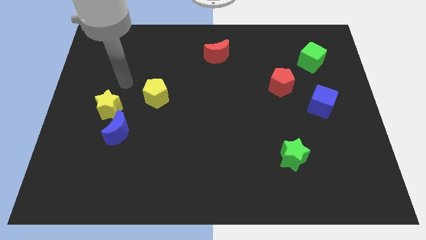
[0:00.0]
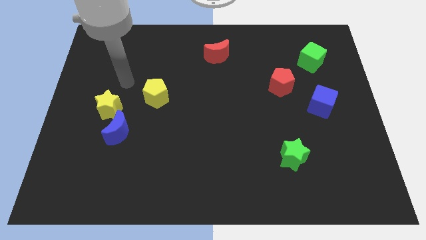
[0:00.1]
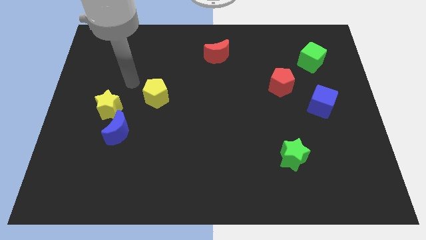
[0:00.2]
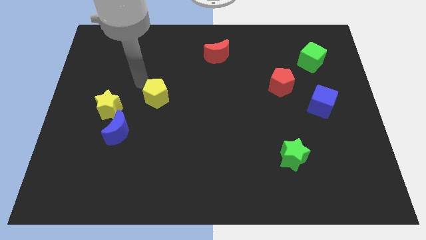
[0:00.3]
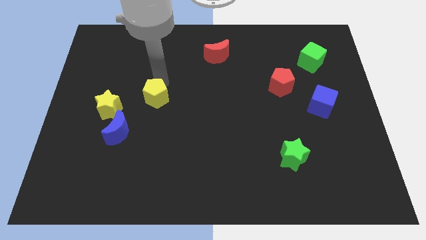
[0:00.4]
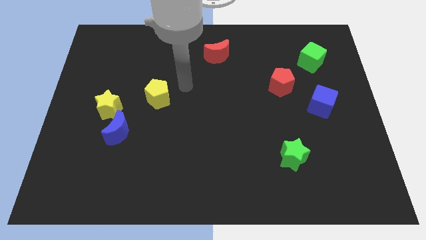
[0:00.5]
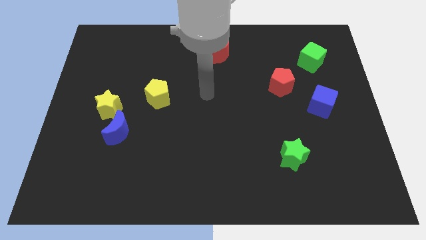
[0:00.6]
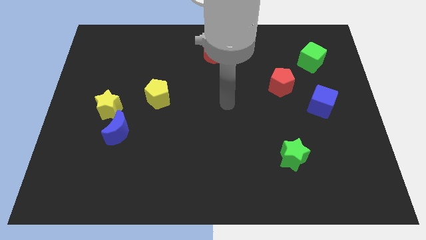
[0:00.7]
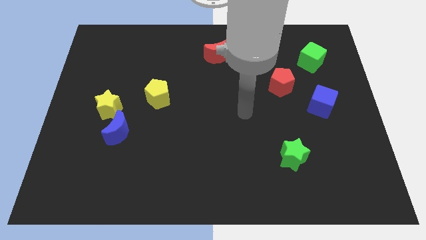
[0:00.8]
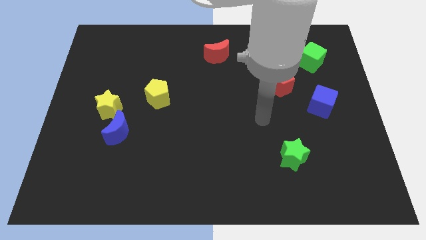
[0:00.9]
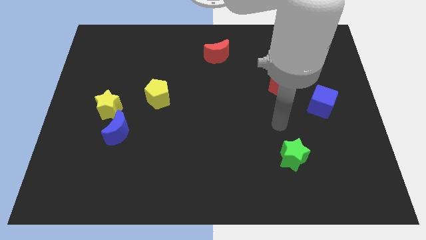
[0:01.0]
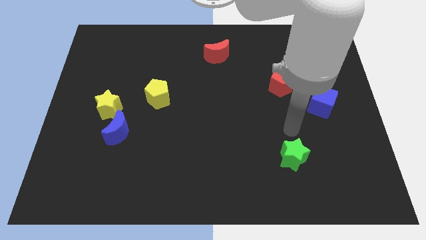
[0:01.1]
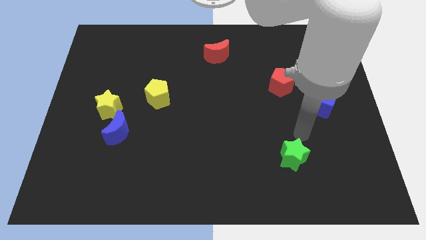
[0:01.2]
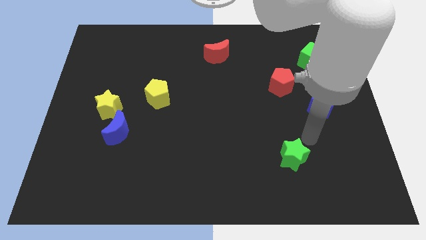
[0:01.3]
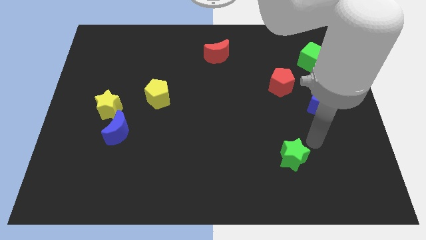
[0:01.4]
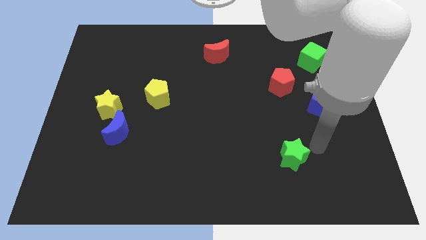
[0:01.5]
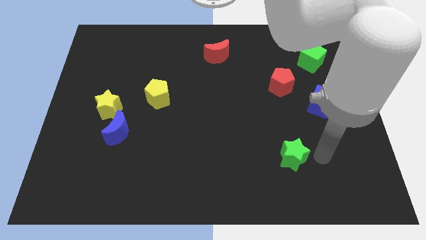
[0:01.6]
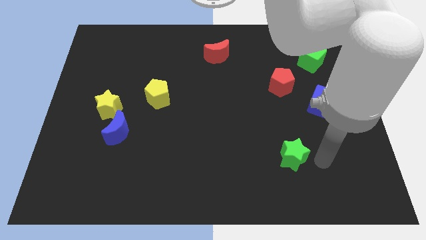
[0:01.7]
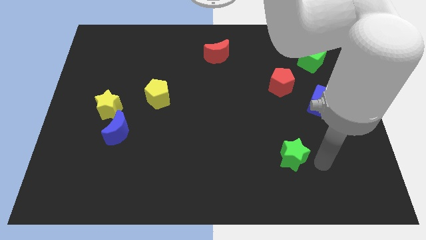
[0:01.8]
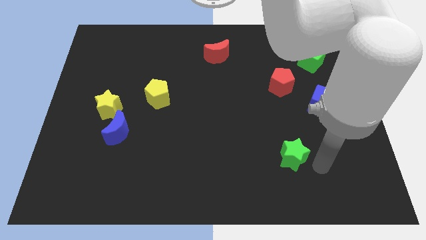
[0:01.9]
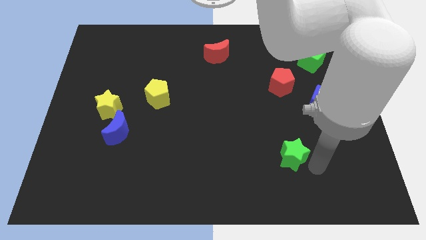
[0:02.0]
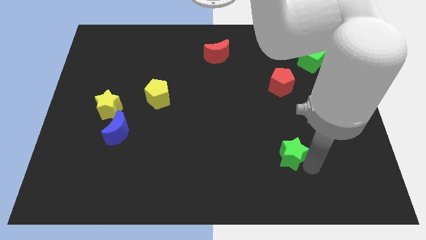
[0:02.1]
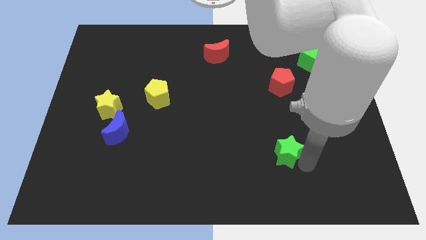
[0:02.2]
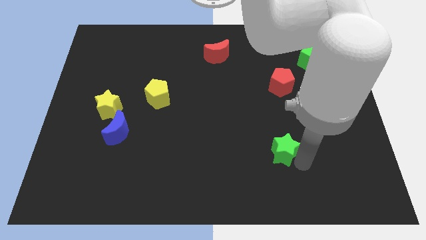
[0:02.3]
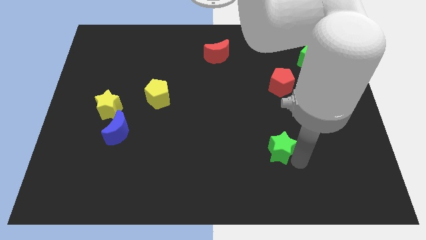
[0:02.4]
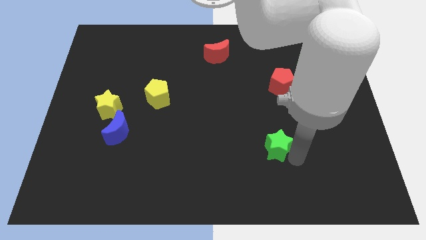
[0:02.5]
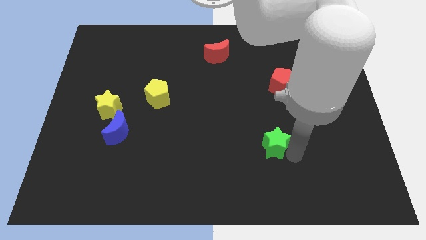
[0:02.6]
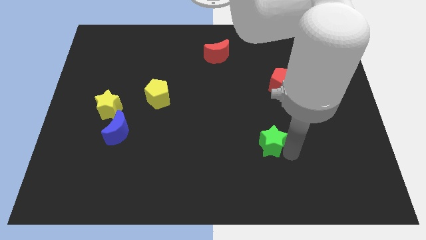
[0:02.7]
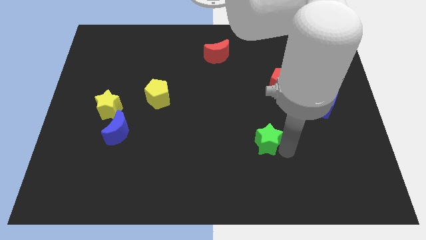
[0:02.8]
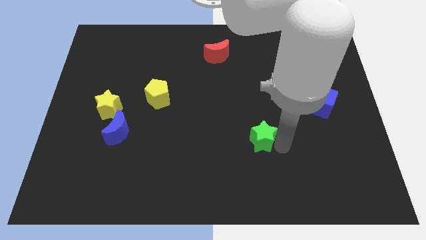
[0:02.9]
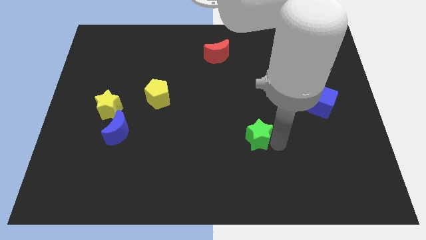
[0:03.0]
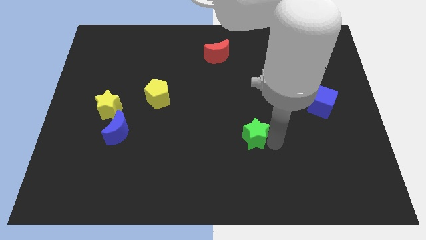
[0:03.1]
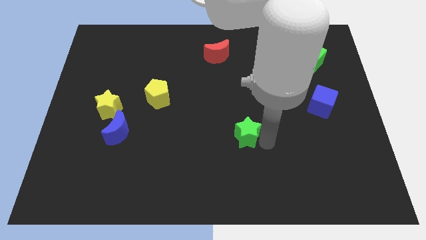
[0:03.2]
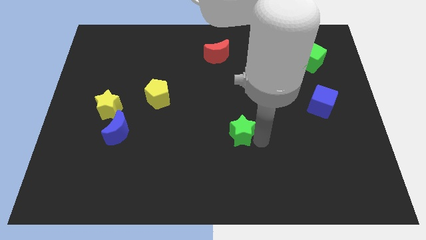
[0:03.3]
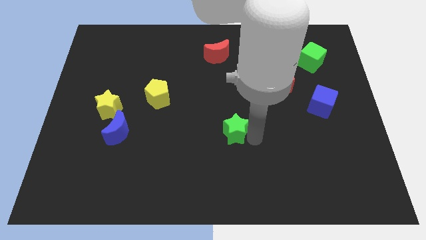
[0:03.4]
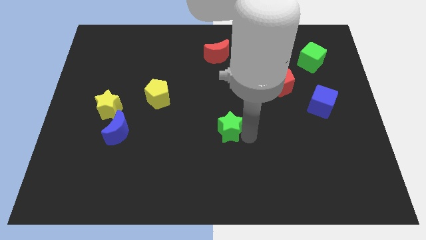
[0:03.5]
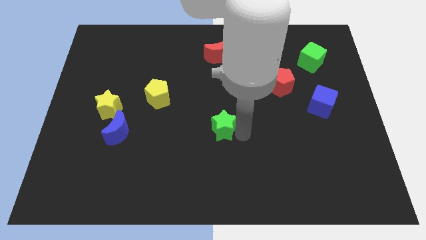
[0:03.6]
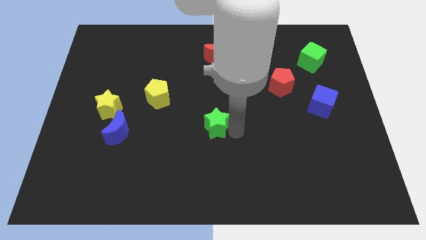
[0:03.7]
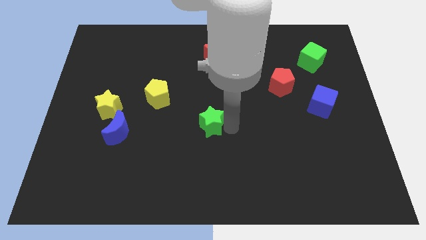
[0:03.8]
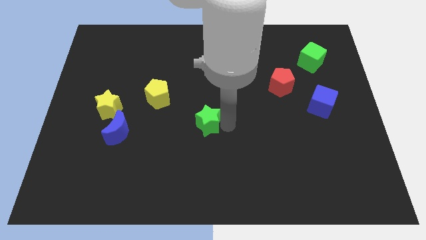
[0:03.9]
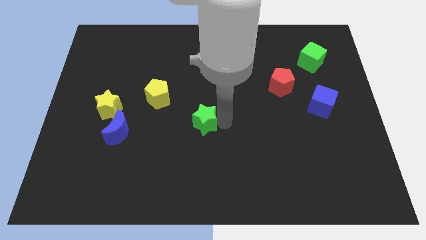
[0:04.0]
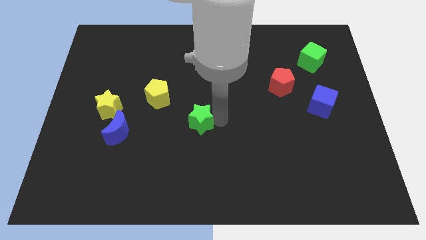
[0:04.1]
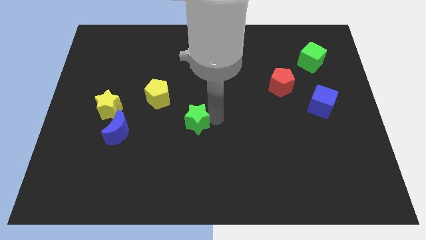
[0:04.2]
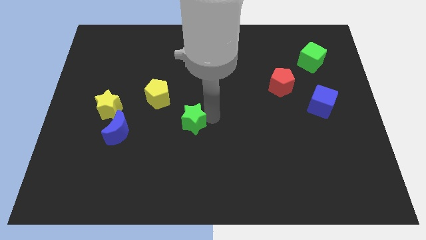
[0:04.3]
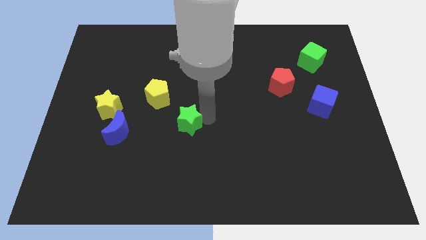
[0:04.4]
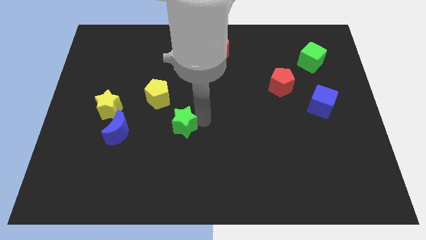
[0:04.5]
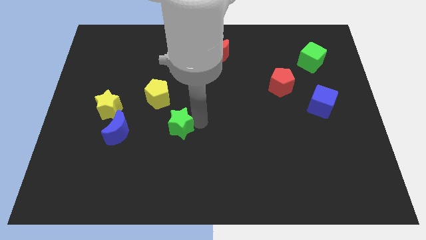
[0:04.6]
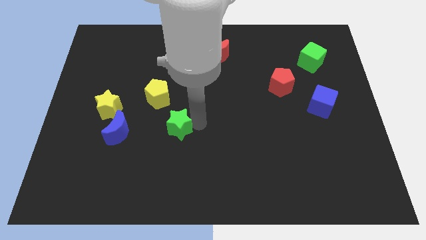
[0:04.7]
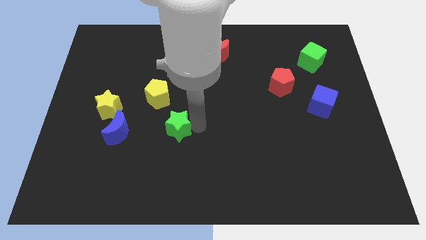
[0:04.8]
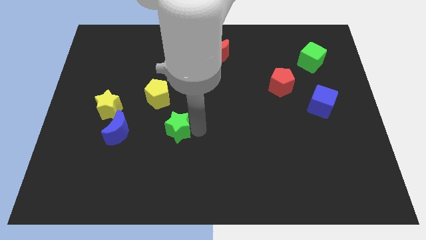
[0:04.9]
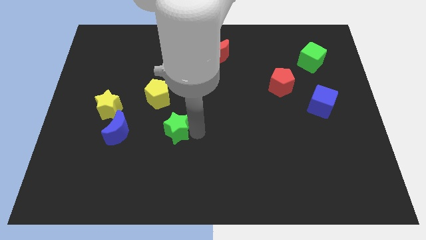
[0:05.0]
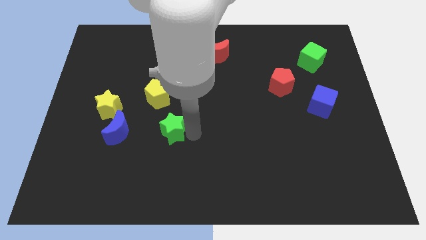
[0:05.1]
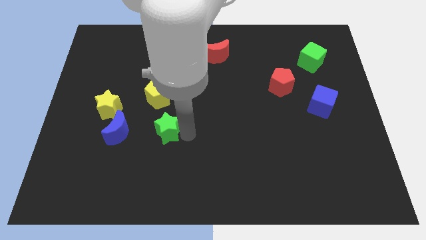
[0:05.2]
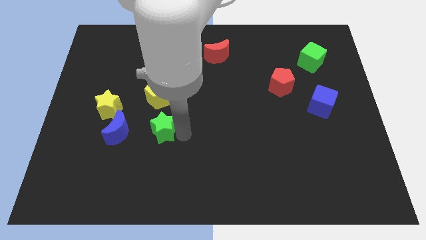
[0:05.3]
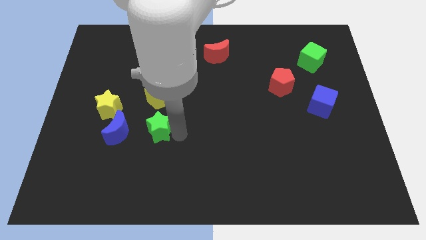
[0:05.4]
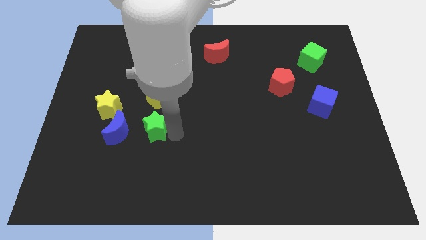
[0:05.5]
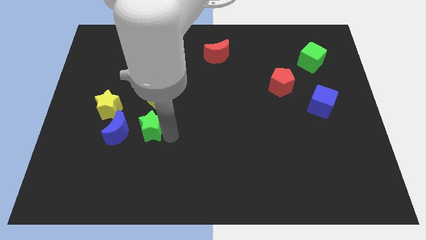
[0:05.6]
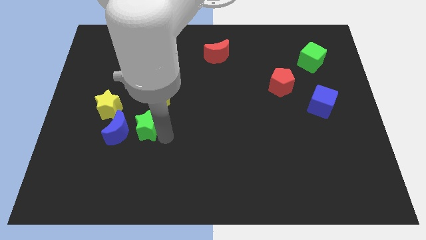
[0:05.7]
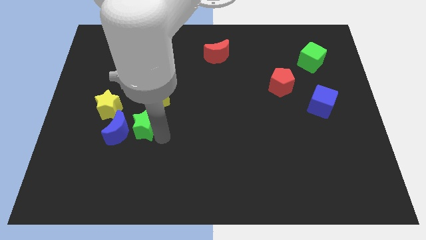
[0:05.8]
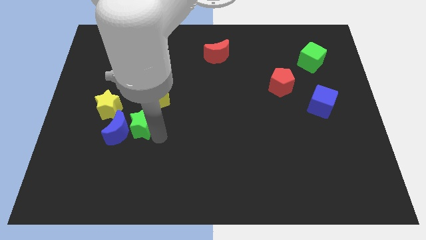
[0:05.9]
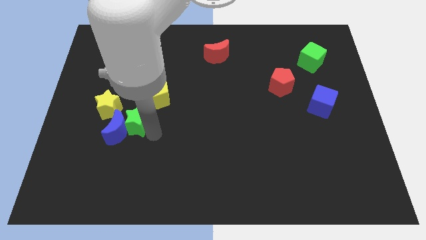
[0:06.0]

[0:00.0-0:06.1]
slide the green star close to the blue moon

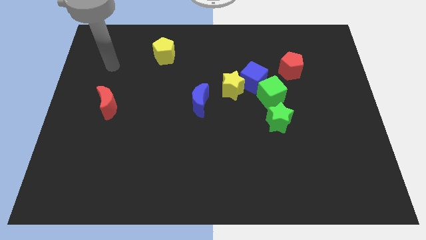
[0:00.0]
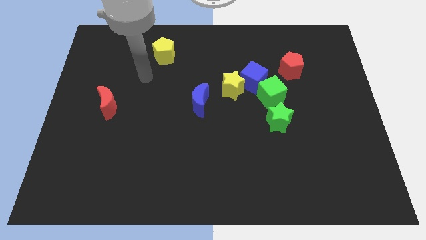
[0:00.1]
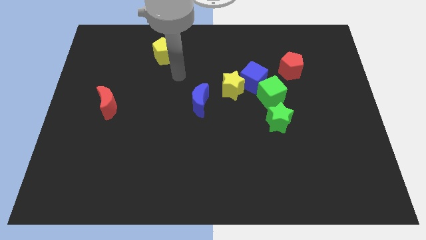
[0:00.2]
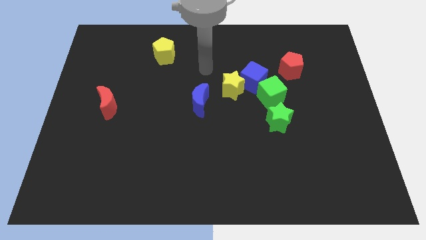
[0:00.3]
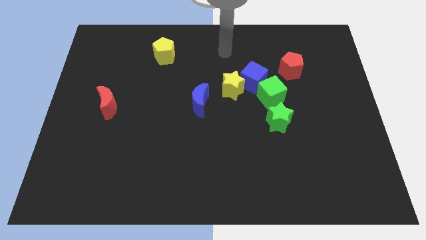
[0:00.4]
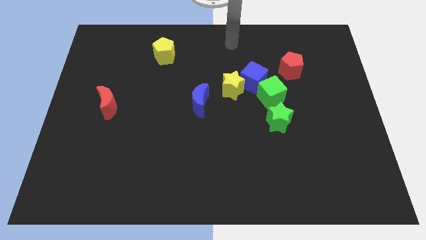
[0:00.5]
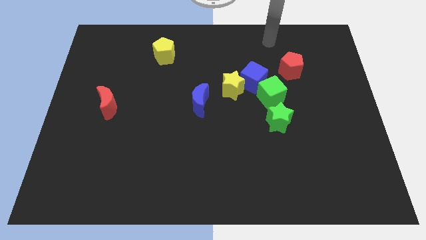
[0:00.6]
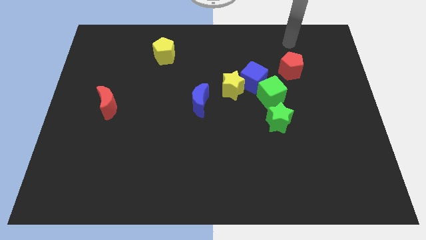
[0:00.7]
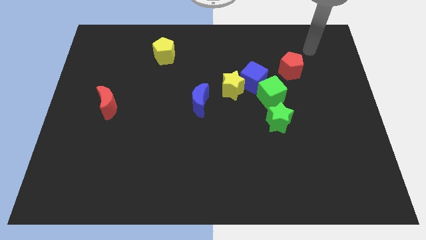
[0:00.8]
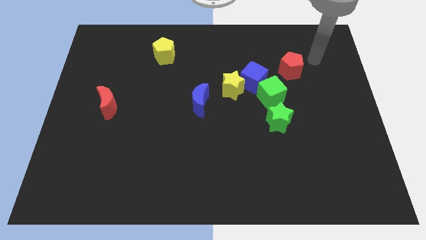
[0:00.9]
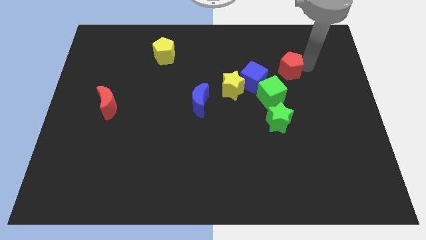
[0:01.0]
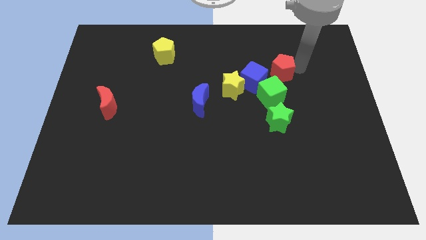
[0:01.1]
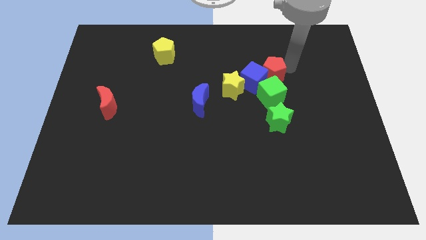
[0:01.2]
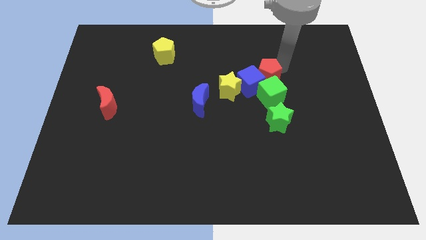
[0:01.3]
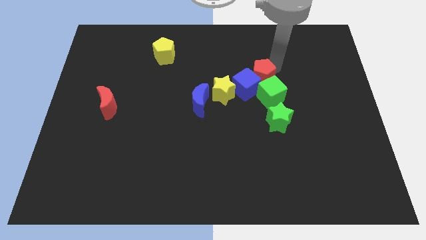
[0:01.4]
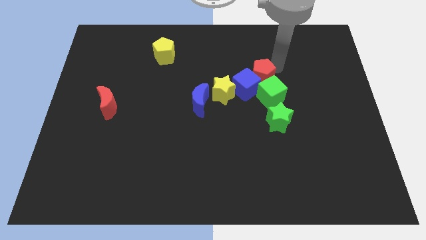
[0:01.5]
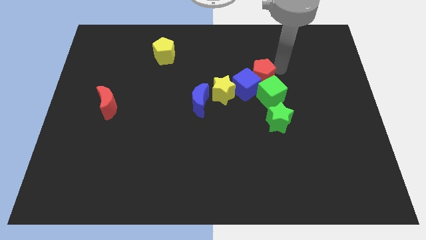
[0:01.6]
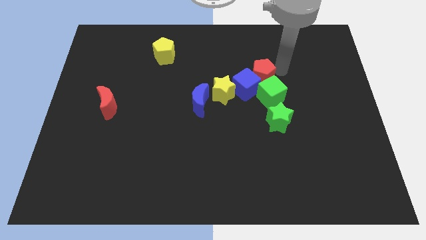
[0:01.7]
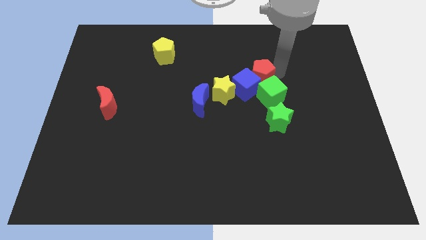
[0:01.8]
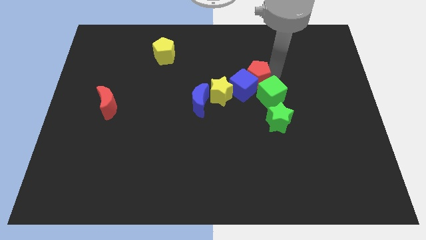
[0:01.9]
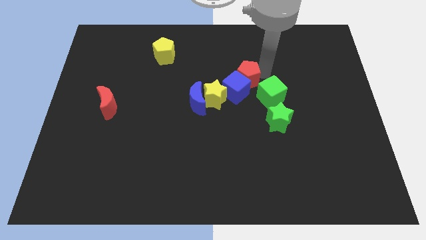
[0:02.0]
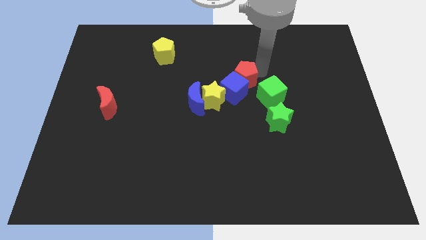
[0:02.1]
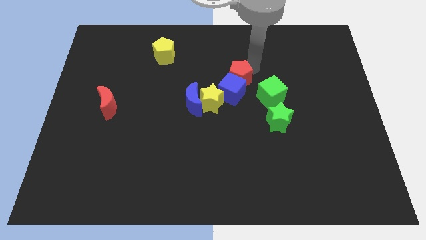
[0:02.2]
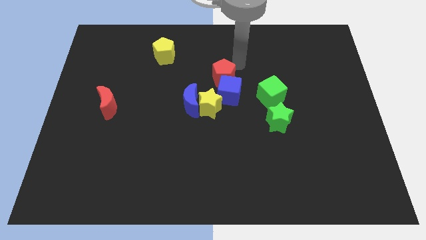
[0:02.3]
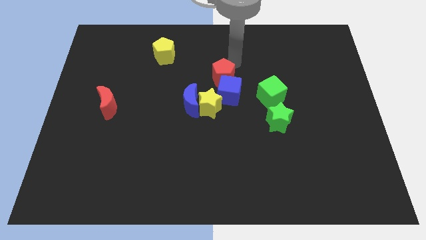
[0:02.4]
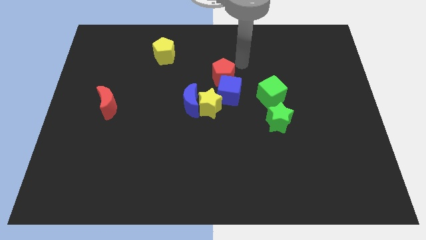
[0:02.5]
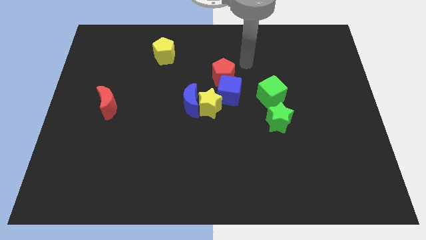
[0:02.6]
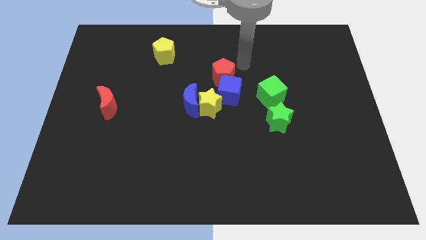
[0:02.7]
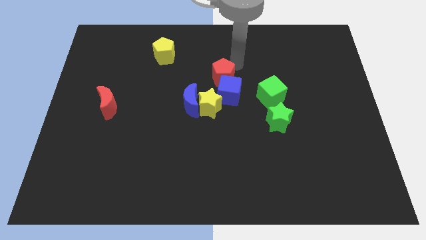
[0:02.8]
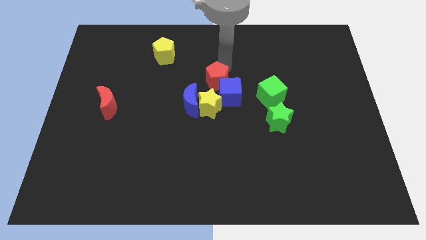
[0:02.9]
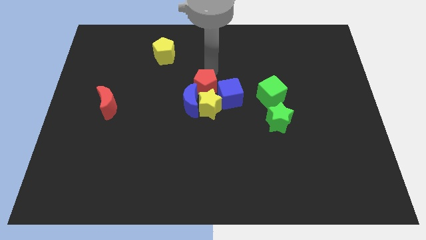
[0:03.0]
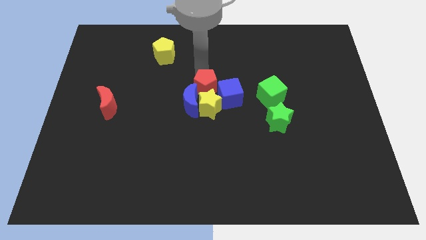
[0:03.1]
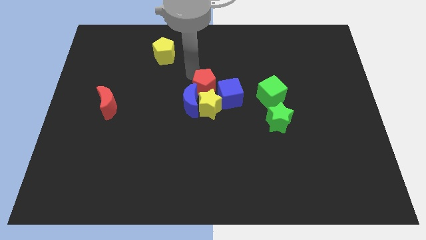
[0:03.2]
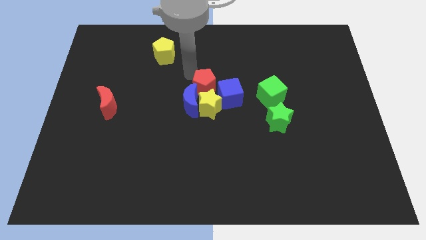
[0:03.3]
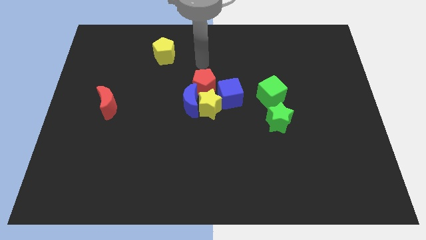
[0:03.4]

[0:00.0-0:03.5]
push the red pentagon towards the blue moon
